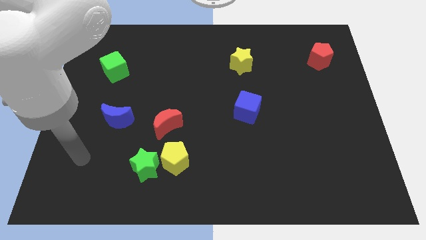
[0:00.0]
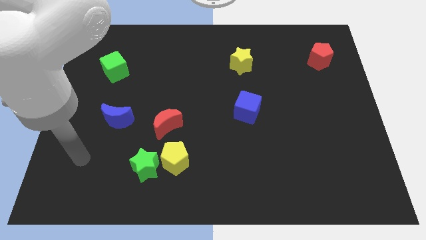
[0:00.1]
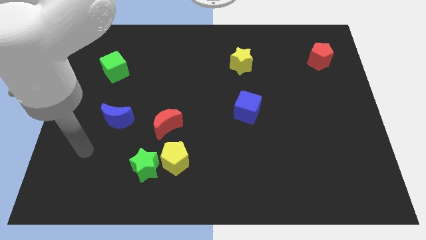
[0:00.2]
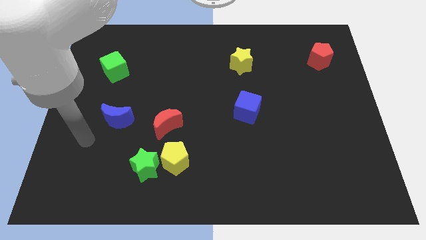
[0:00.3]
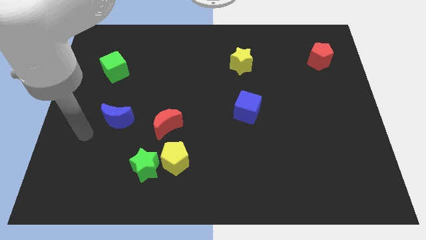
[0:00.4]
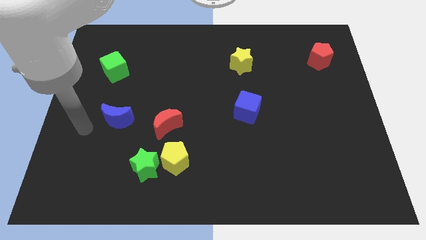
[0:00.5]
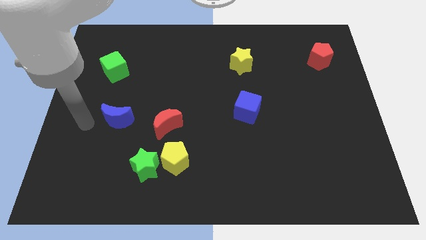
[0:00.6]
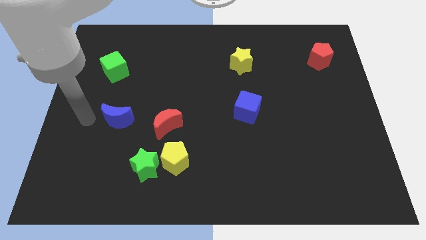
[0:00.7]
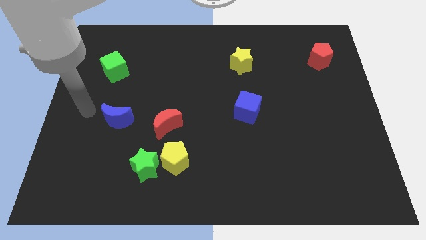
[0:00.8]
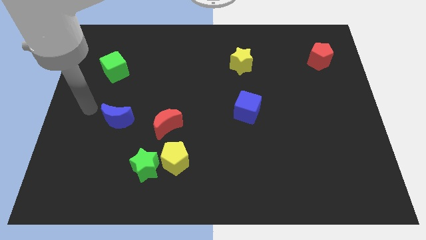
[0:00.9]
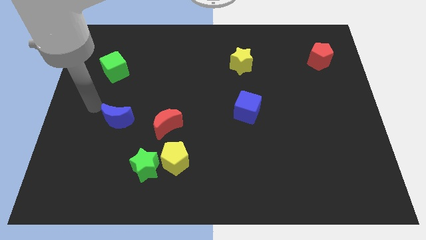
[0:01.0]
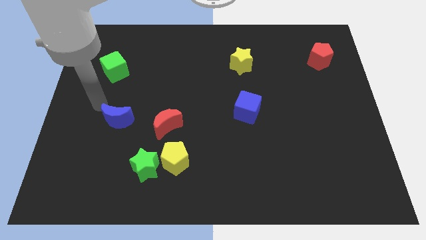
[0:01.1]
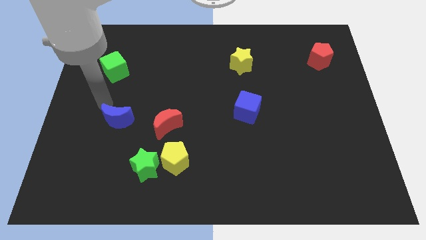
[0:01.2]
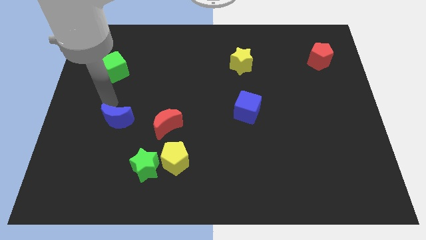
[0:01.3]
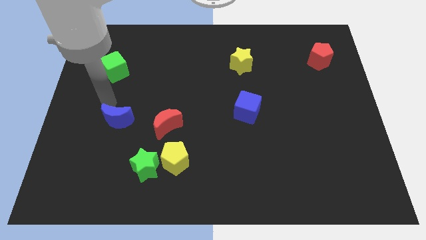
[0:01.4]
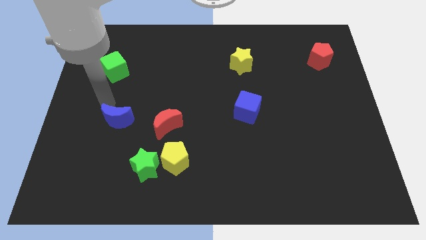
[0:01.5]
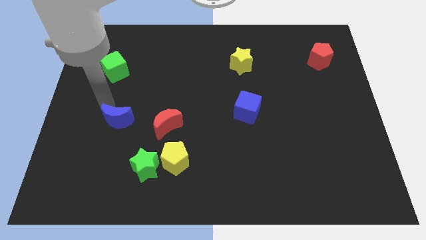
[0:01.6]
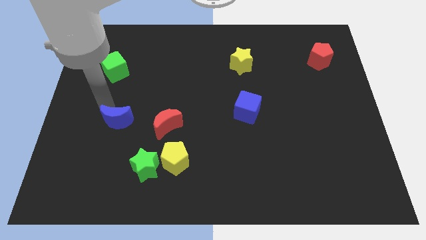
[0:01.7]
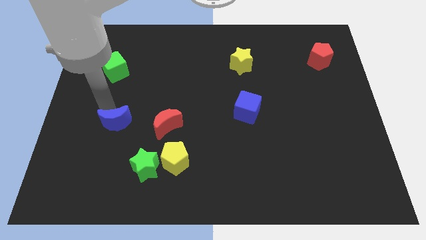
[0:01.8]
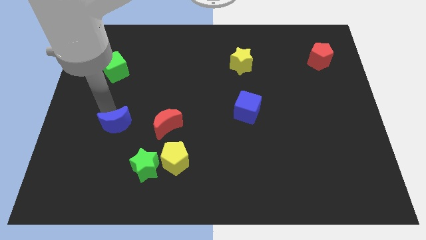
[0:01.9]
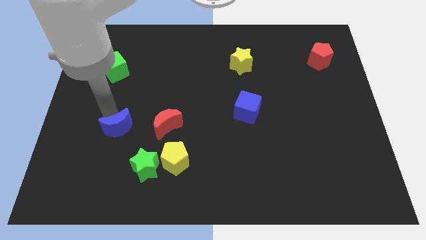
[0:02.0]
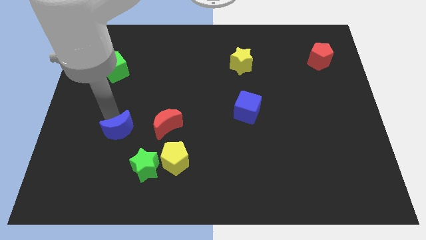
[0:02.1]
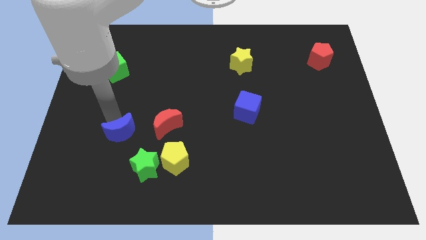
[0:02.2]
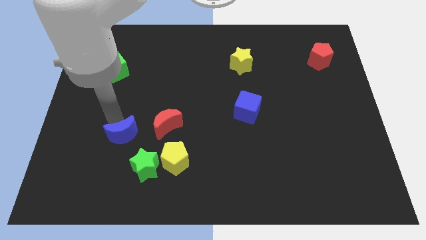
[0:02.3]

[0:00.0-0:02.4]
move the blue crescent to the bottom left side of the red crescent

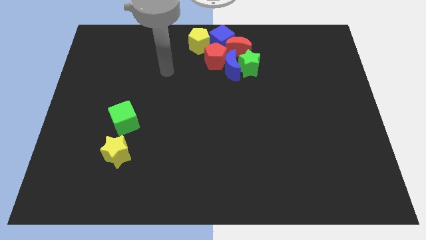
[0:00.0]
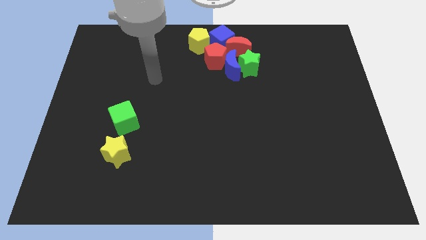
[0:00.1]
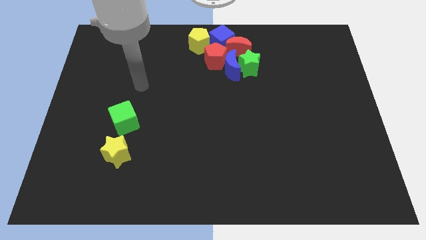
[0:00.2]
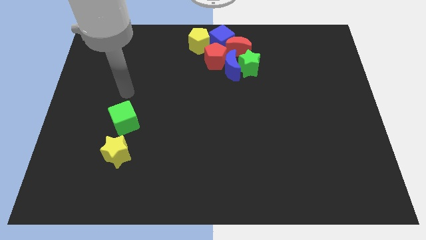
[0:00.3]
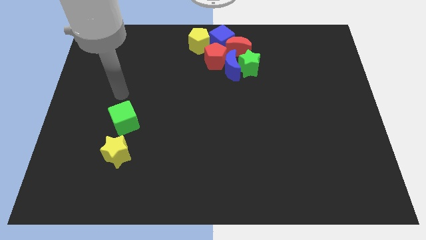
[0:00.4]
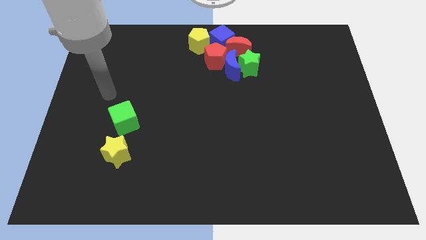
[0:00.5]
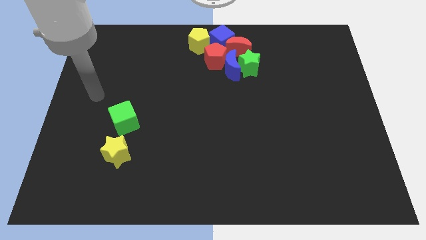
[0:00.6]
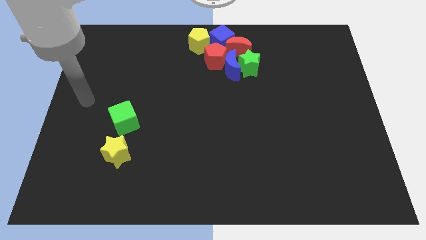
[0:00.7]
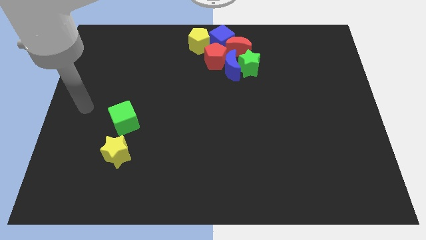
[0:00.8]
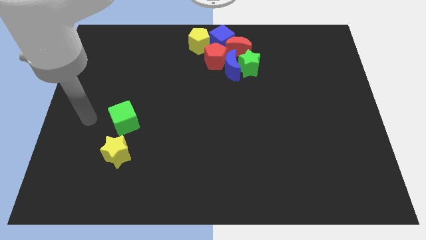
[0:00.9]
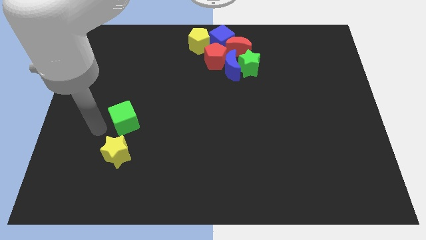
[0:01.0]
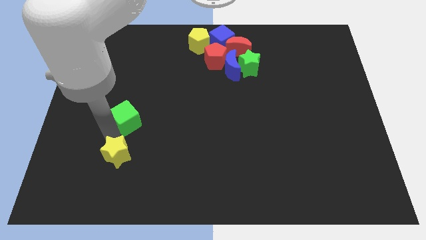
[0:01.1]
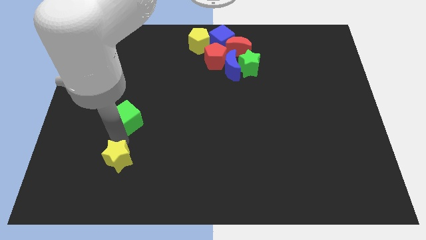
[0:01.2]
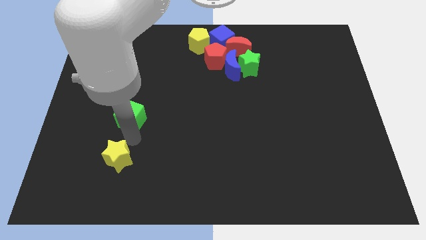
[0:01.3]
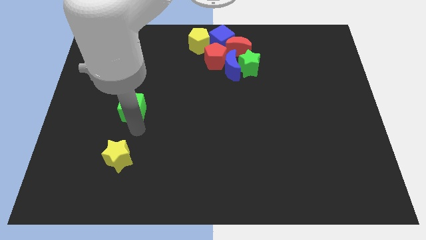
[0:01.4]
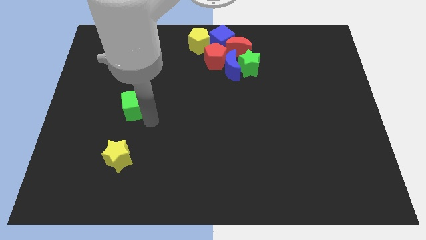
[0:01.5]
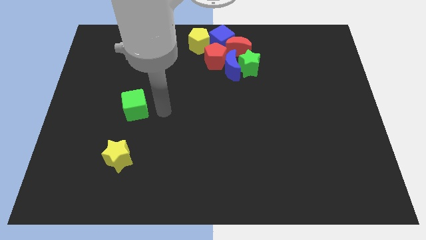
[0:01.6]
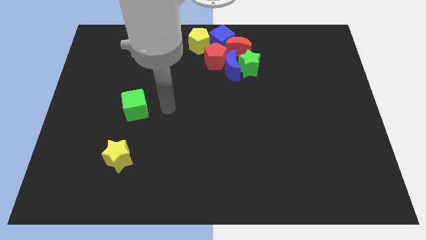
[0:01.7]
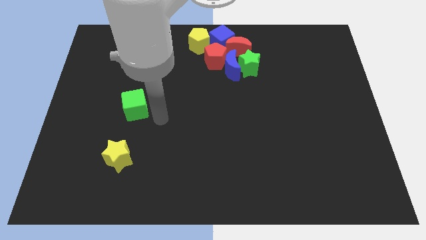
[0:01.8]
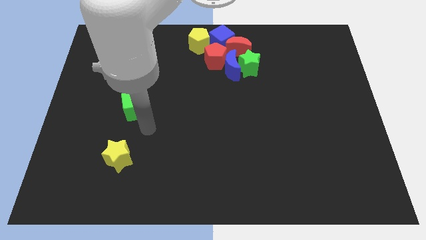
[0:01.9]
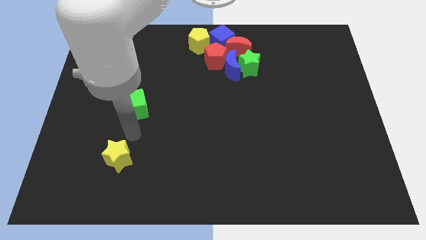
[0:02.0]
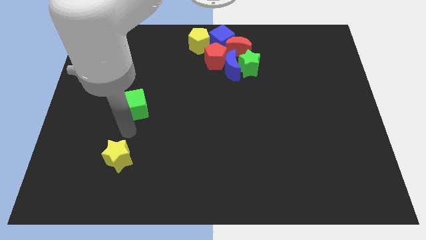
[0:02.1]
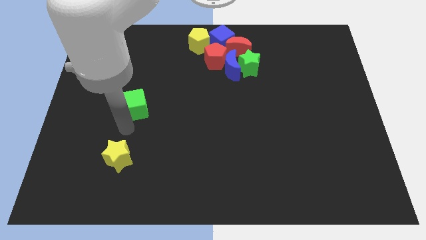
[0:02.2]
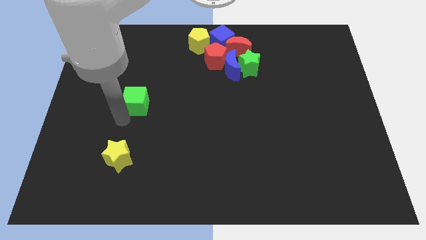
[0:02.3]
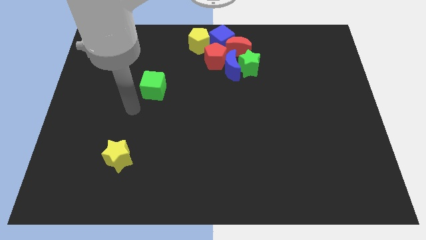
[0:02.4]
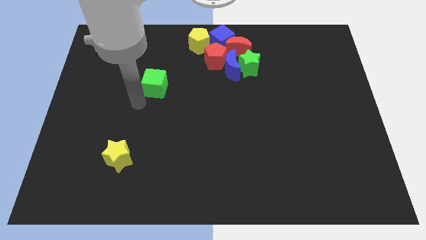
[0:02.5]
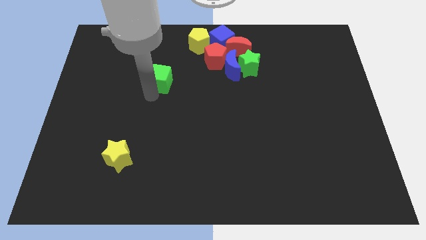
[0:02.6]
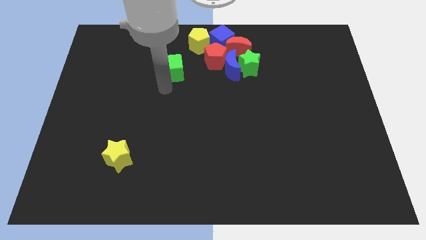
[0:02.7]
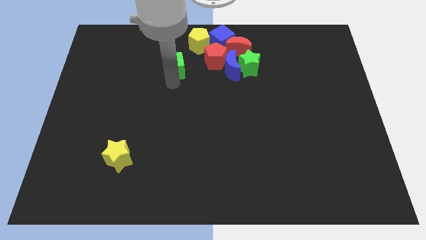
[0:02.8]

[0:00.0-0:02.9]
separate the yellow star and green cube

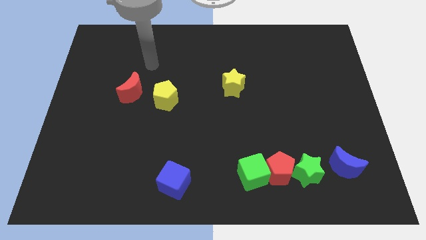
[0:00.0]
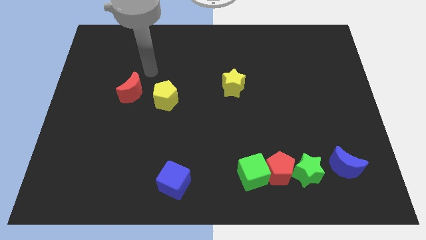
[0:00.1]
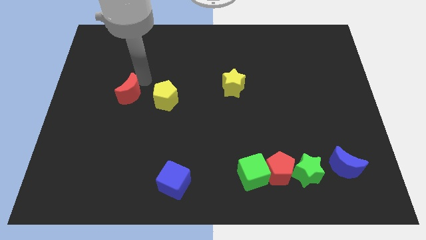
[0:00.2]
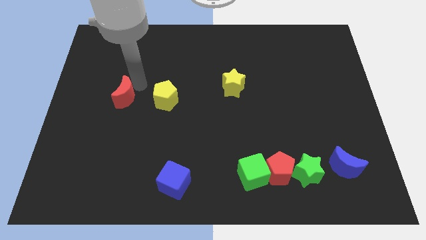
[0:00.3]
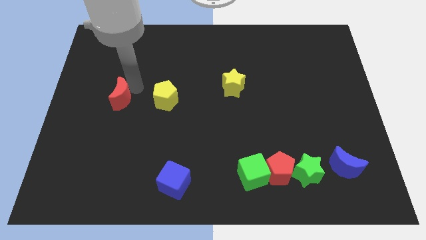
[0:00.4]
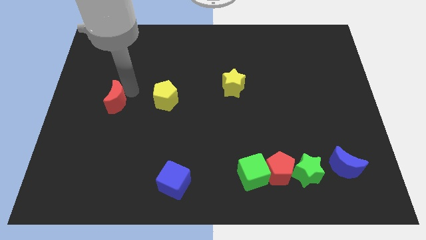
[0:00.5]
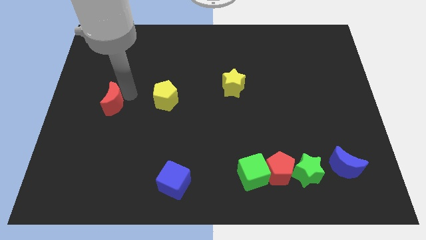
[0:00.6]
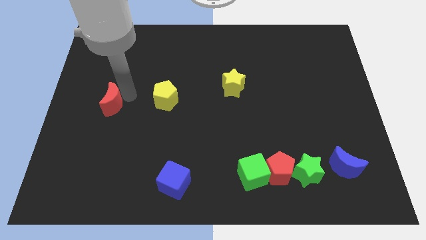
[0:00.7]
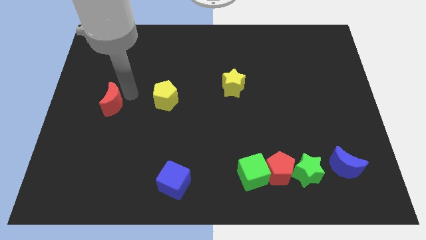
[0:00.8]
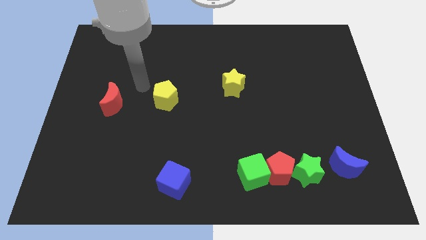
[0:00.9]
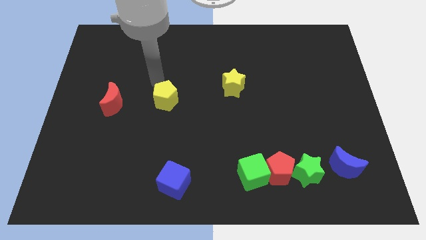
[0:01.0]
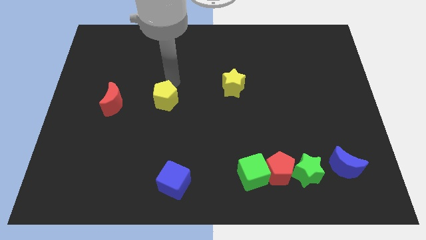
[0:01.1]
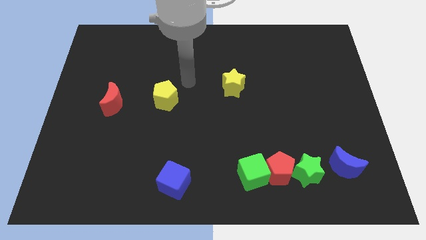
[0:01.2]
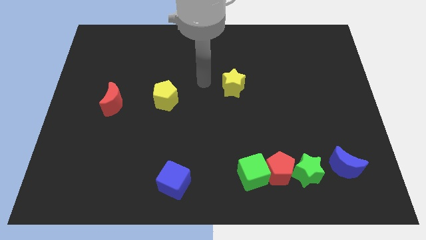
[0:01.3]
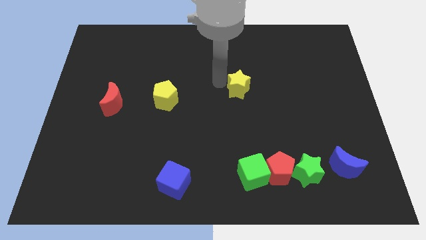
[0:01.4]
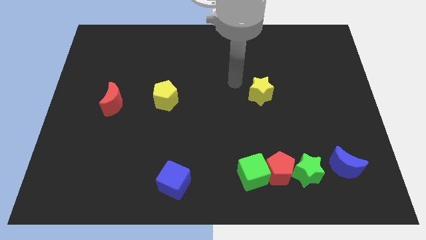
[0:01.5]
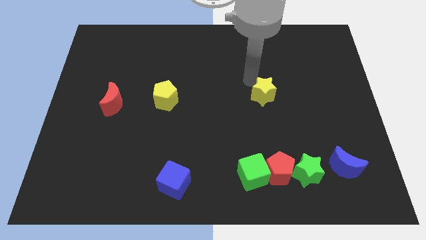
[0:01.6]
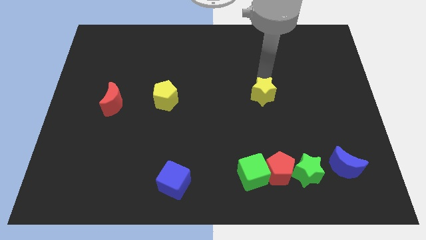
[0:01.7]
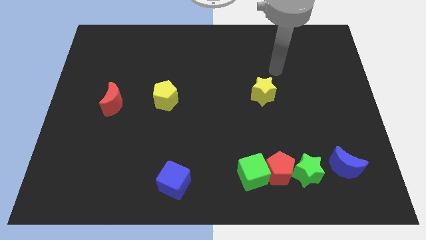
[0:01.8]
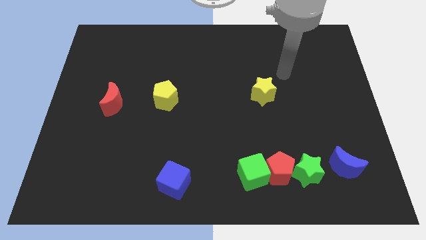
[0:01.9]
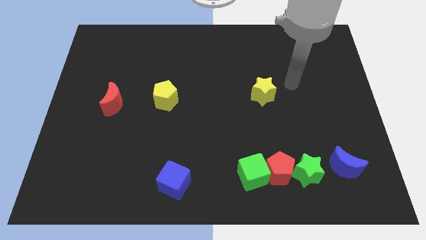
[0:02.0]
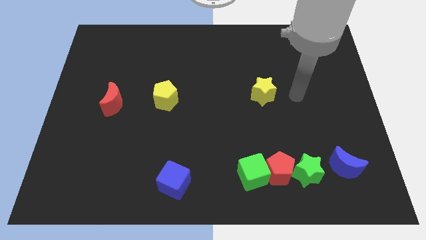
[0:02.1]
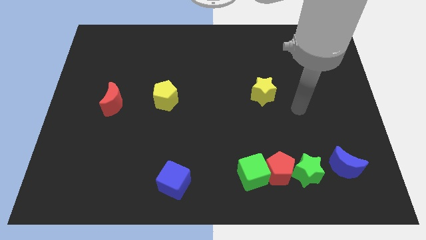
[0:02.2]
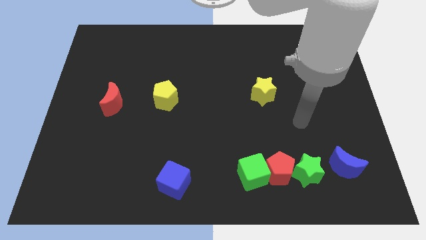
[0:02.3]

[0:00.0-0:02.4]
move the yellow star slightly to the right

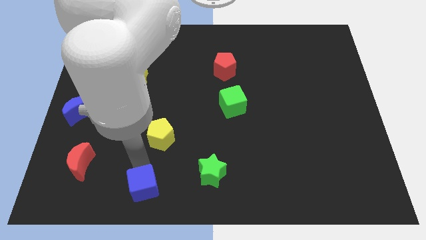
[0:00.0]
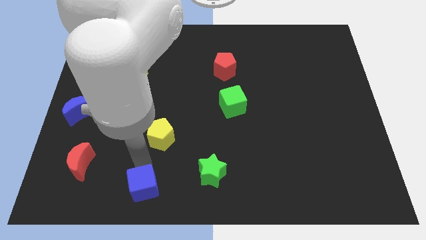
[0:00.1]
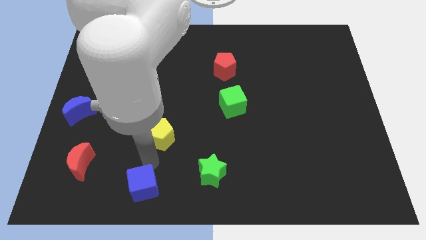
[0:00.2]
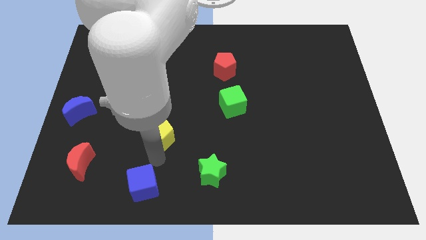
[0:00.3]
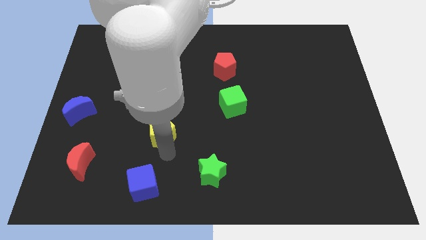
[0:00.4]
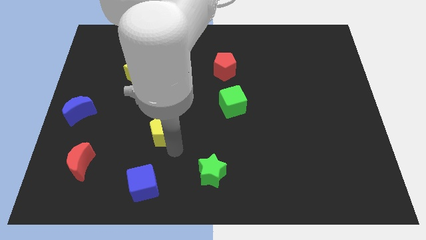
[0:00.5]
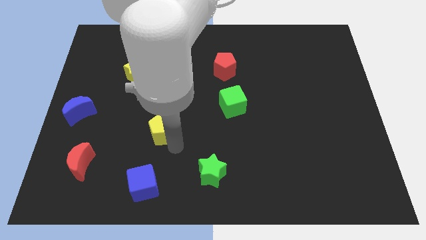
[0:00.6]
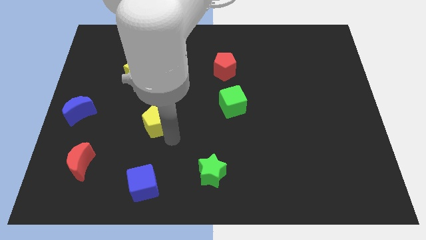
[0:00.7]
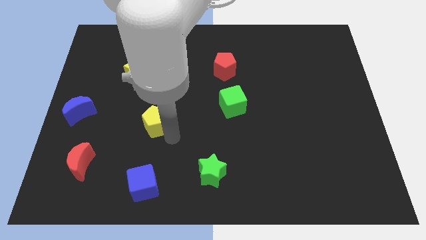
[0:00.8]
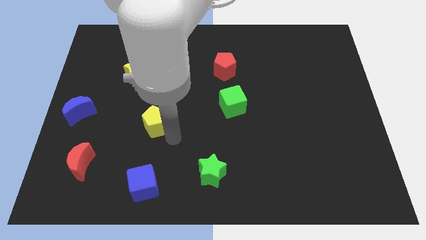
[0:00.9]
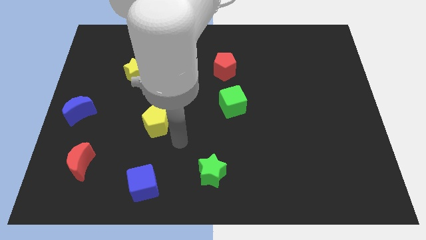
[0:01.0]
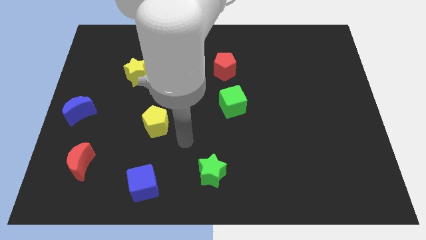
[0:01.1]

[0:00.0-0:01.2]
move the yellow pentagon slightly to the top

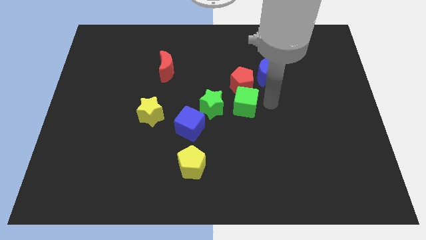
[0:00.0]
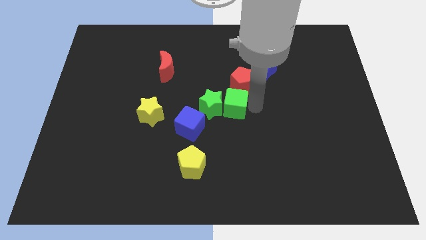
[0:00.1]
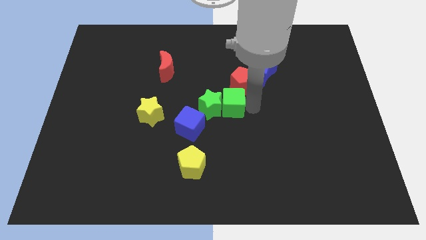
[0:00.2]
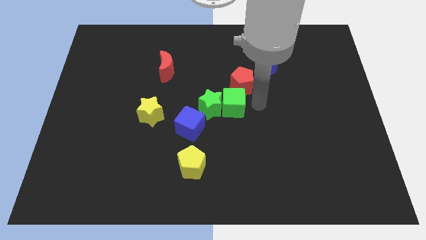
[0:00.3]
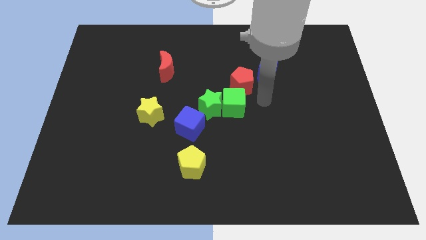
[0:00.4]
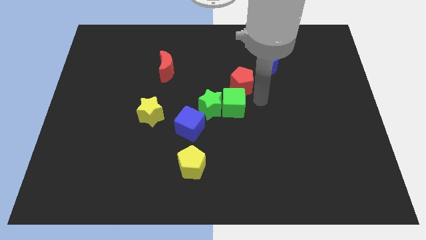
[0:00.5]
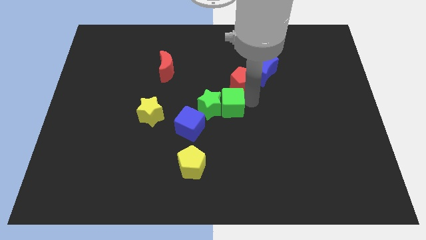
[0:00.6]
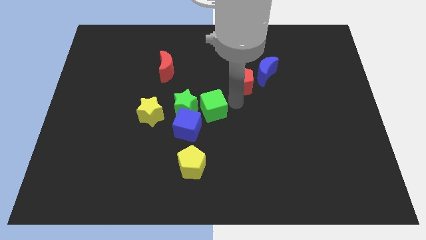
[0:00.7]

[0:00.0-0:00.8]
push green cube into the green star
